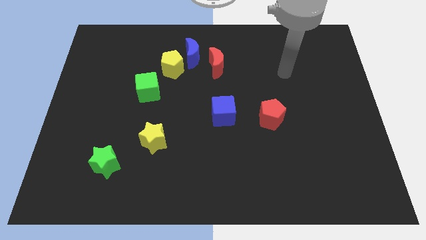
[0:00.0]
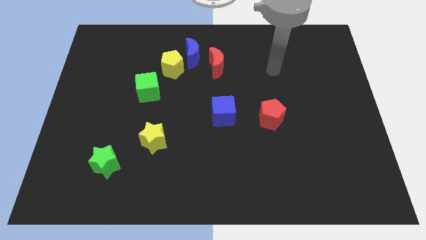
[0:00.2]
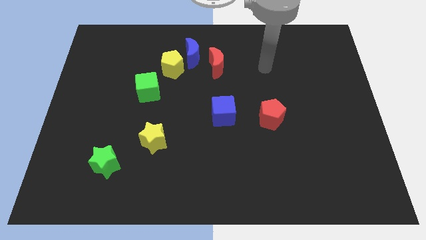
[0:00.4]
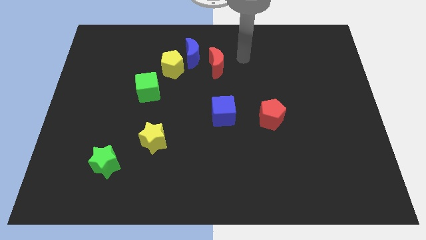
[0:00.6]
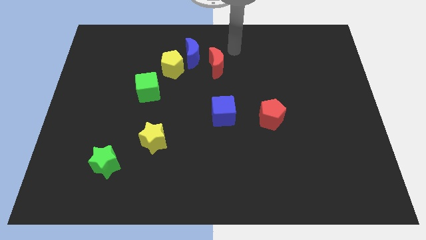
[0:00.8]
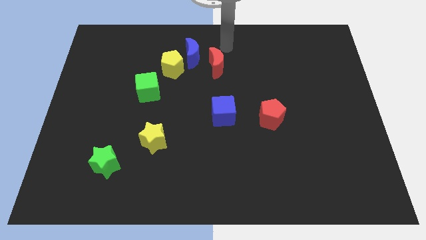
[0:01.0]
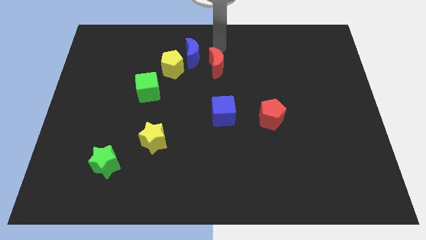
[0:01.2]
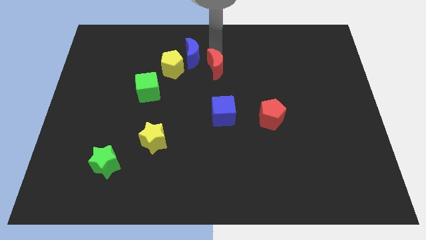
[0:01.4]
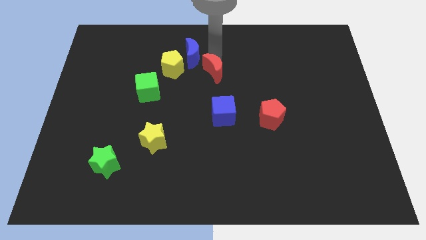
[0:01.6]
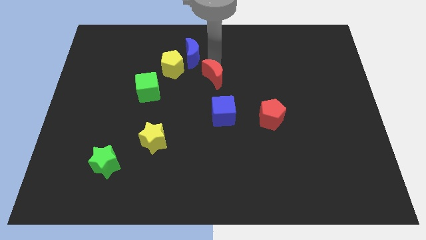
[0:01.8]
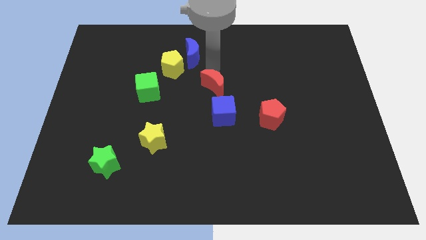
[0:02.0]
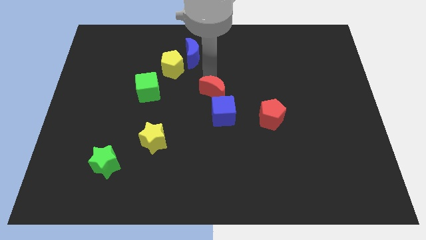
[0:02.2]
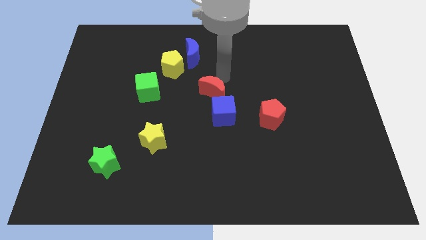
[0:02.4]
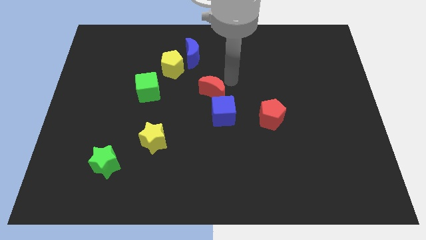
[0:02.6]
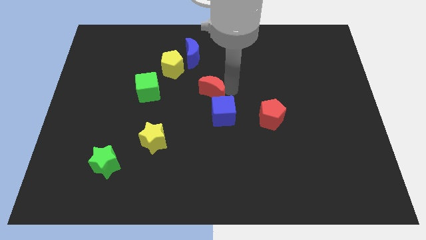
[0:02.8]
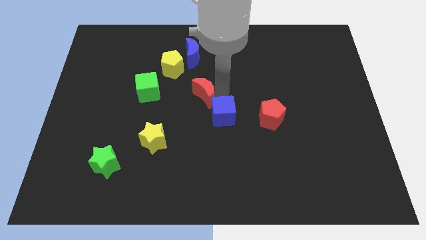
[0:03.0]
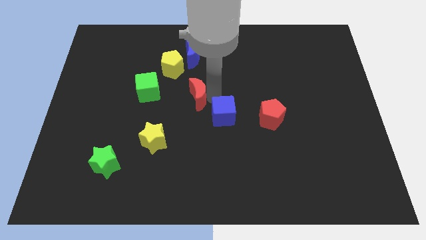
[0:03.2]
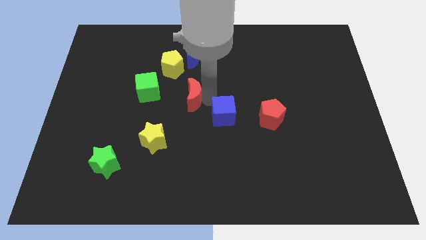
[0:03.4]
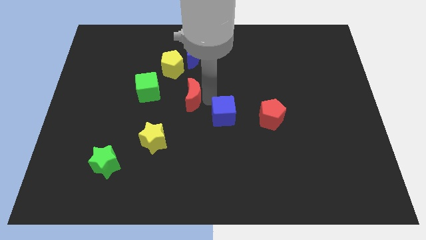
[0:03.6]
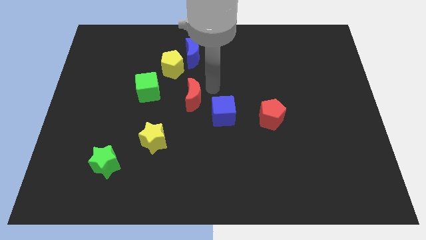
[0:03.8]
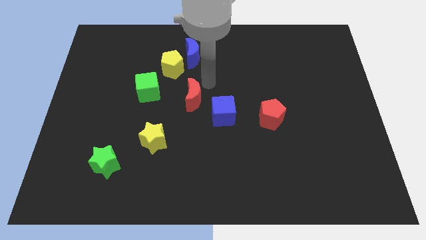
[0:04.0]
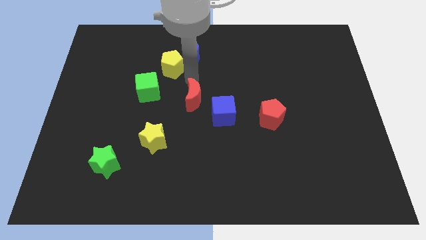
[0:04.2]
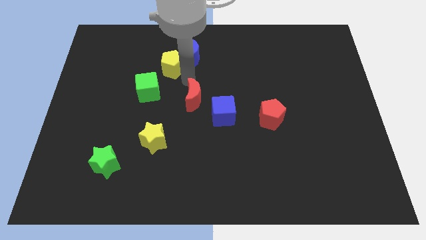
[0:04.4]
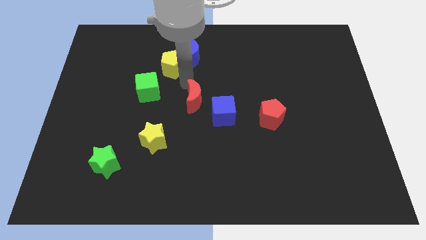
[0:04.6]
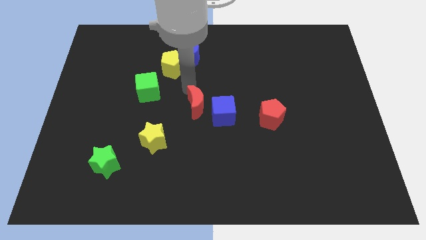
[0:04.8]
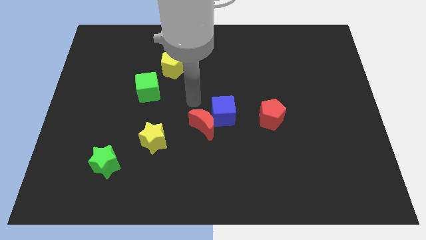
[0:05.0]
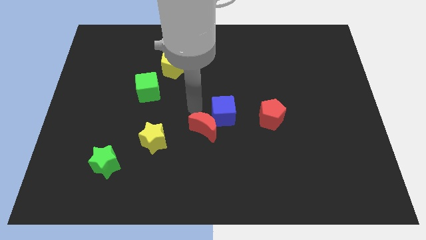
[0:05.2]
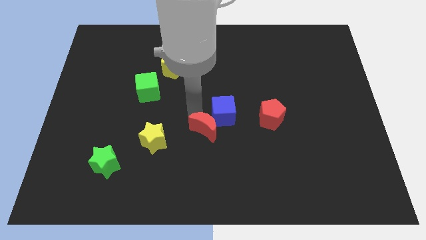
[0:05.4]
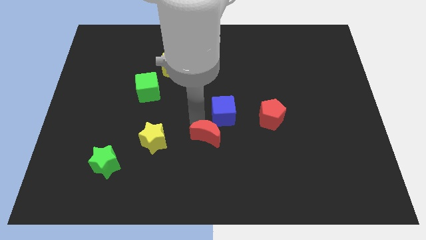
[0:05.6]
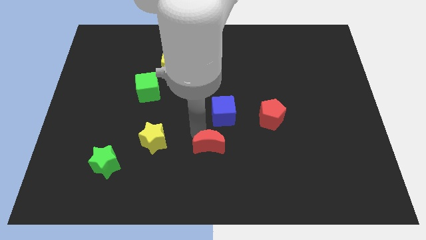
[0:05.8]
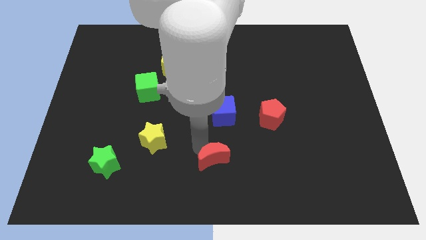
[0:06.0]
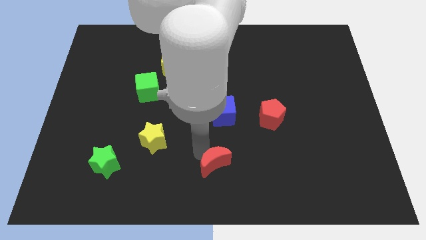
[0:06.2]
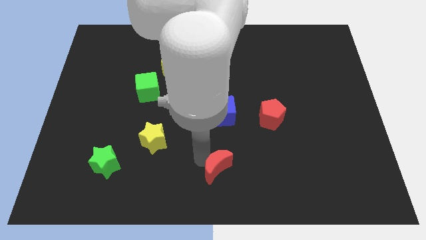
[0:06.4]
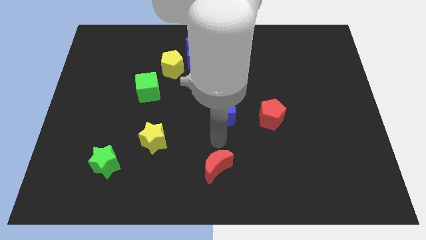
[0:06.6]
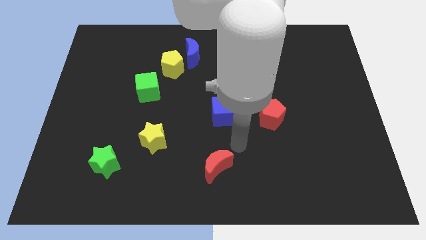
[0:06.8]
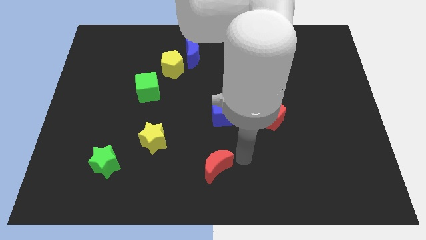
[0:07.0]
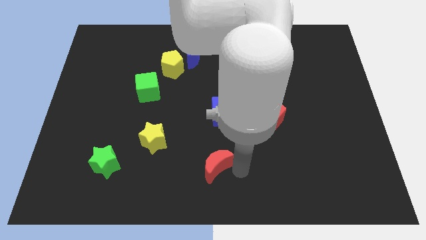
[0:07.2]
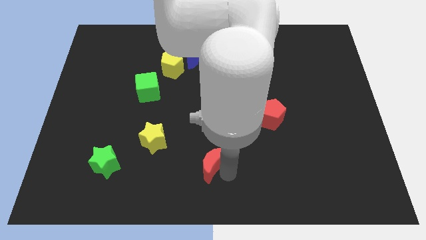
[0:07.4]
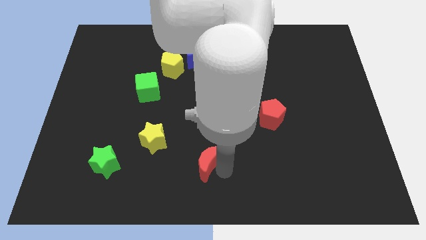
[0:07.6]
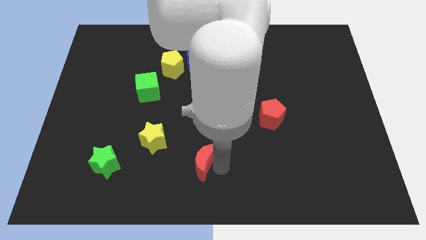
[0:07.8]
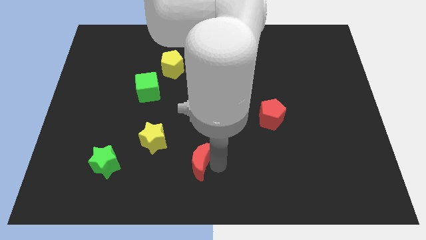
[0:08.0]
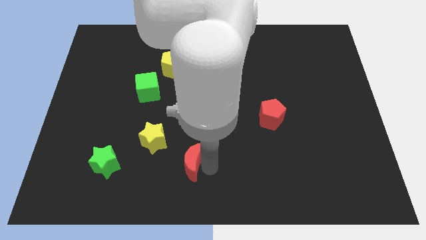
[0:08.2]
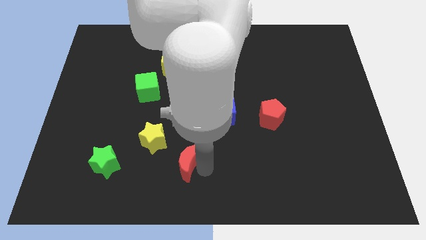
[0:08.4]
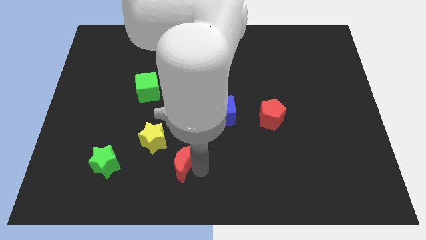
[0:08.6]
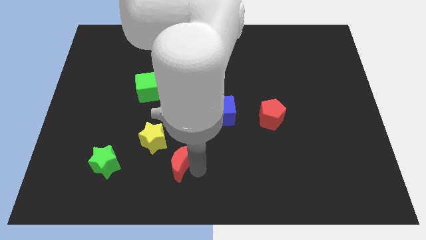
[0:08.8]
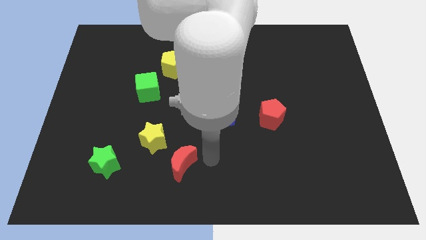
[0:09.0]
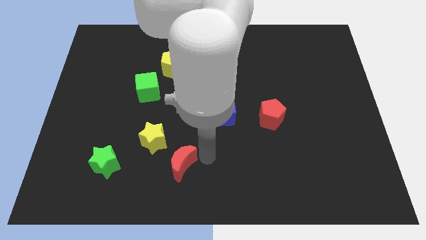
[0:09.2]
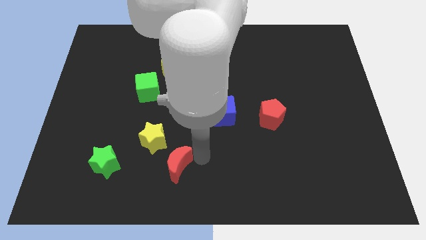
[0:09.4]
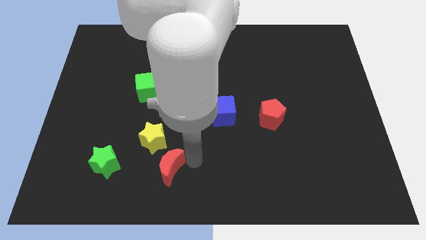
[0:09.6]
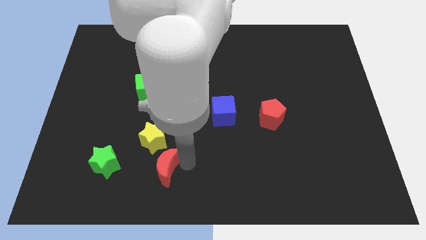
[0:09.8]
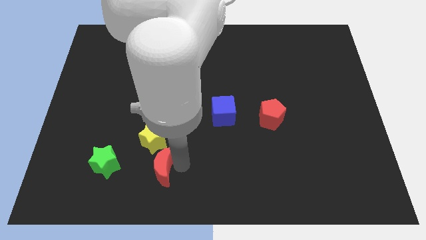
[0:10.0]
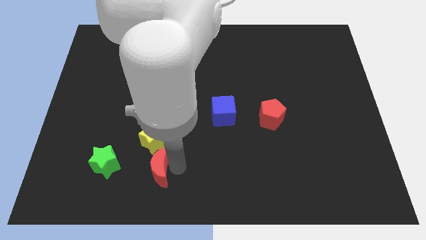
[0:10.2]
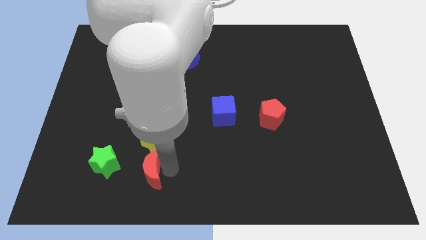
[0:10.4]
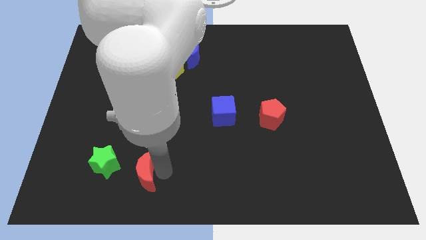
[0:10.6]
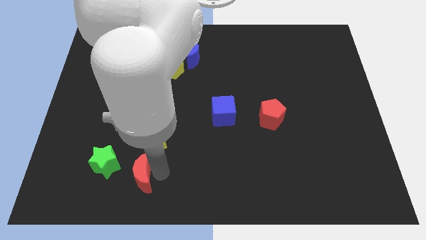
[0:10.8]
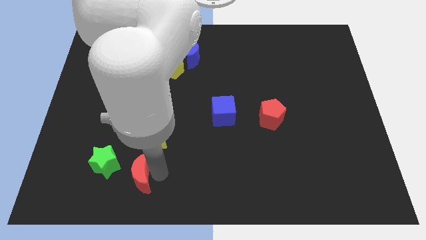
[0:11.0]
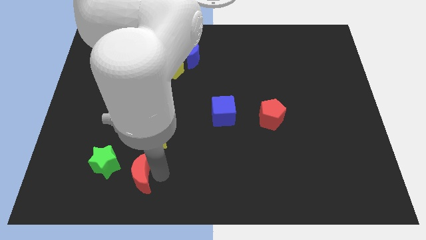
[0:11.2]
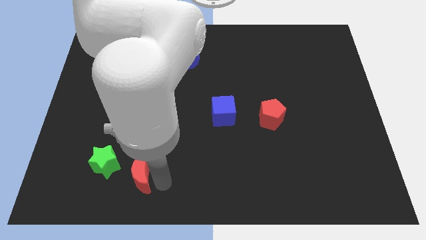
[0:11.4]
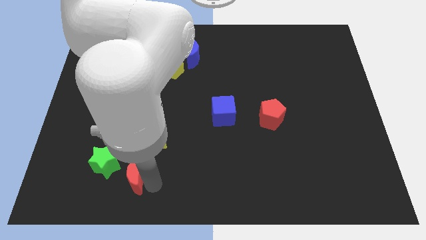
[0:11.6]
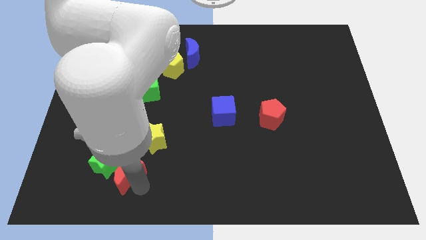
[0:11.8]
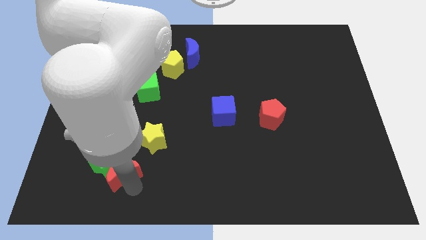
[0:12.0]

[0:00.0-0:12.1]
slide the red moon towards the green star

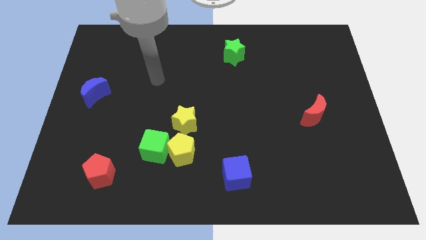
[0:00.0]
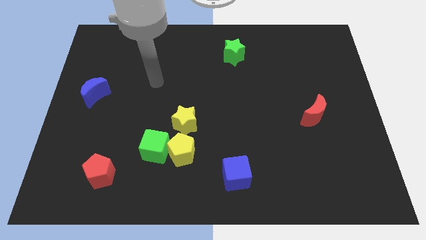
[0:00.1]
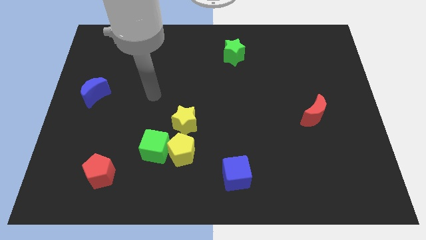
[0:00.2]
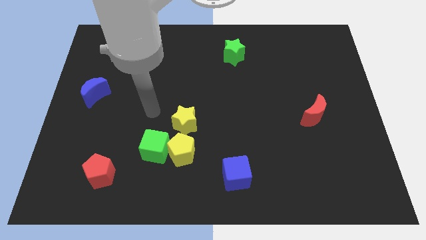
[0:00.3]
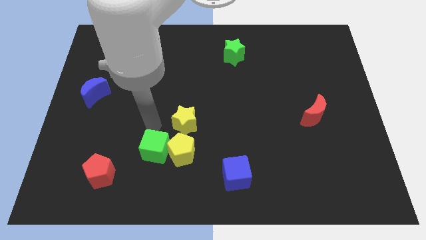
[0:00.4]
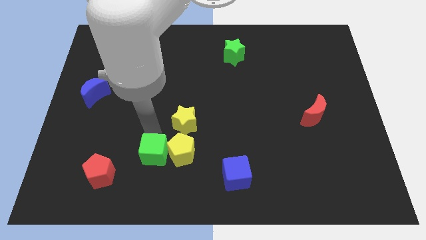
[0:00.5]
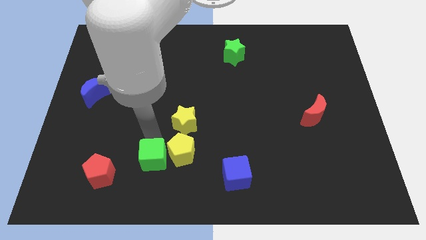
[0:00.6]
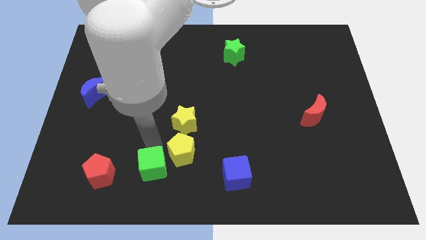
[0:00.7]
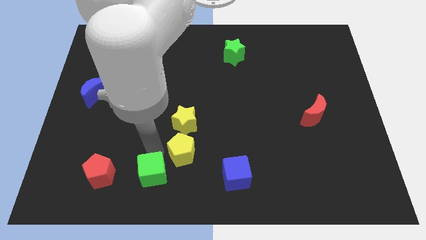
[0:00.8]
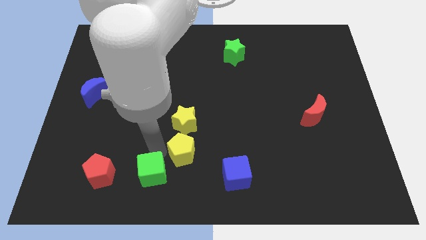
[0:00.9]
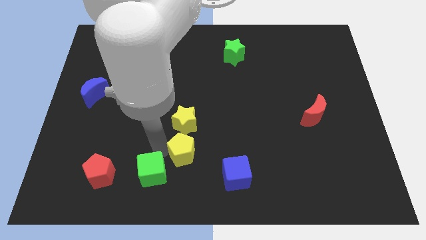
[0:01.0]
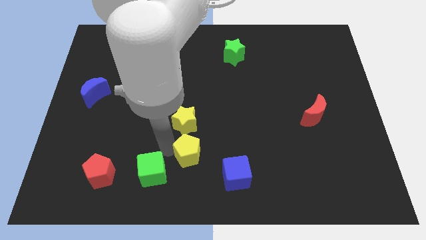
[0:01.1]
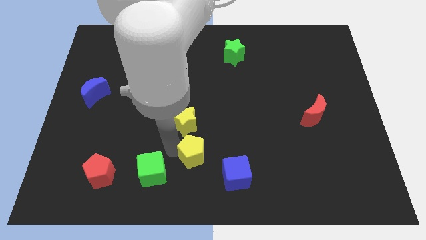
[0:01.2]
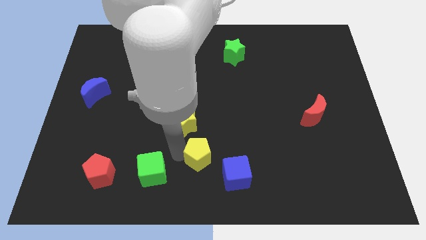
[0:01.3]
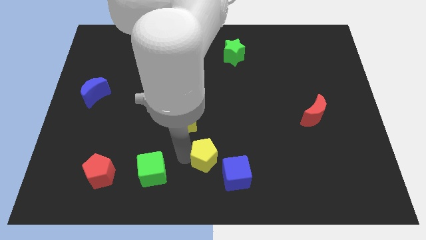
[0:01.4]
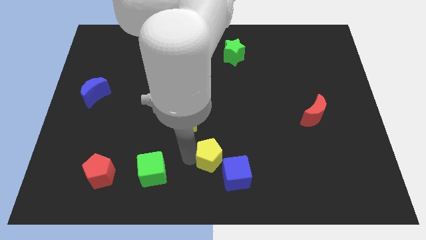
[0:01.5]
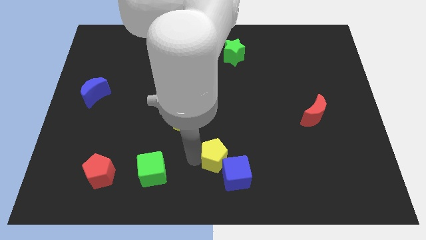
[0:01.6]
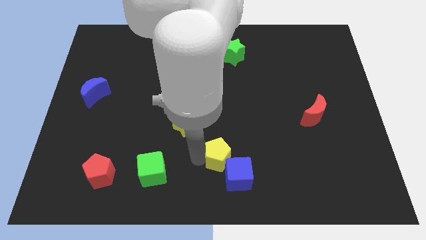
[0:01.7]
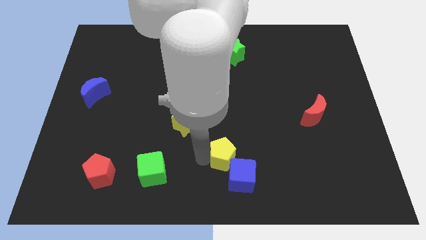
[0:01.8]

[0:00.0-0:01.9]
push the yellow pentagon next to the blue cube

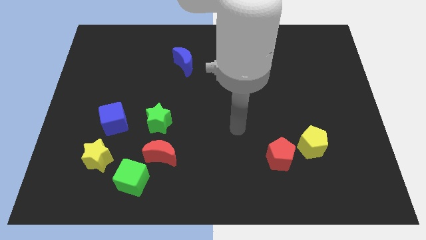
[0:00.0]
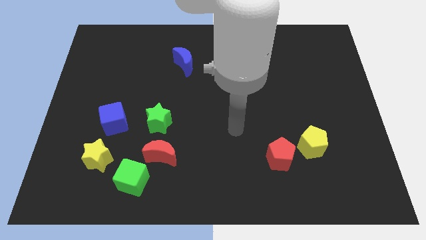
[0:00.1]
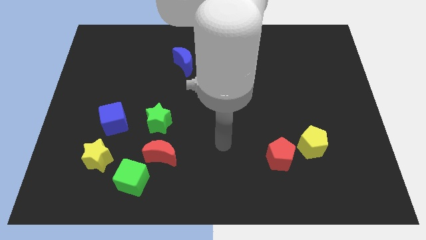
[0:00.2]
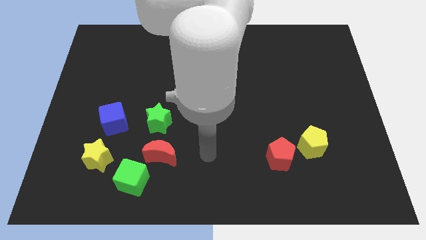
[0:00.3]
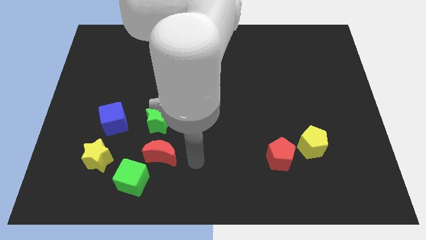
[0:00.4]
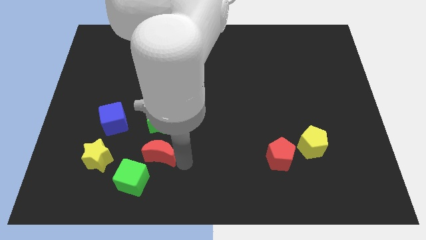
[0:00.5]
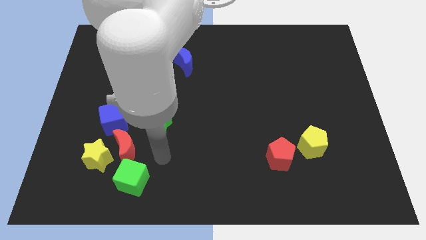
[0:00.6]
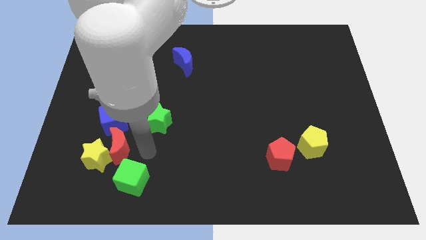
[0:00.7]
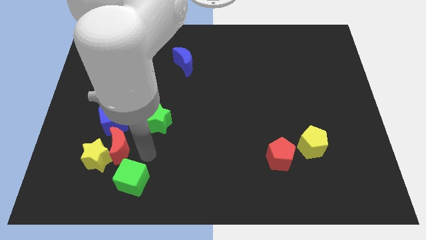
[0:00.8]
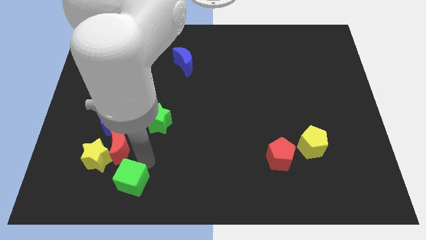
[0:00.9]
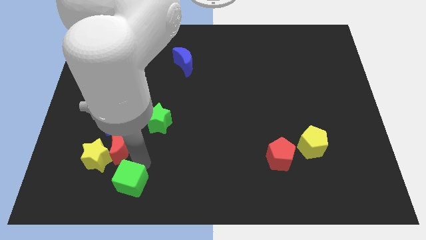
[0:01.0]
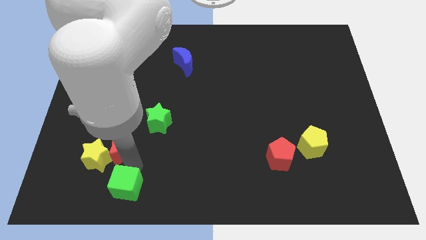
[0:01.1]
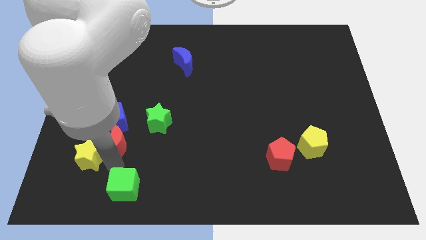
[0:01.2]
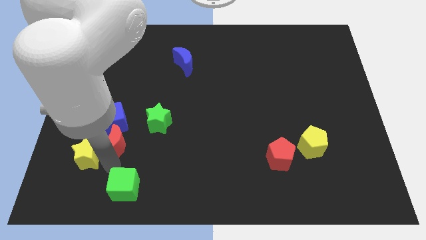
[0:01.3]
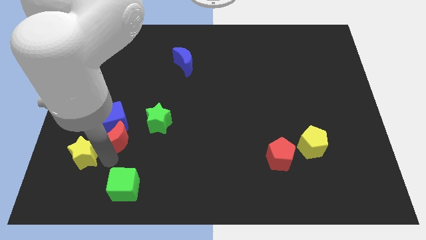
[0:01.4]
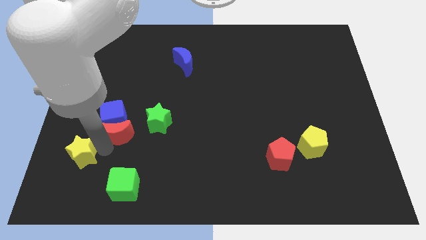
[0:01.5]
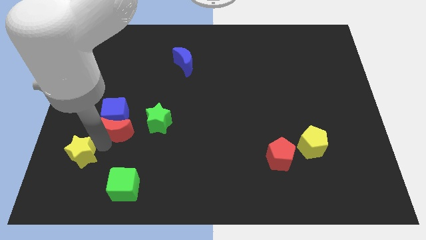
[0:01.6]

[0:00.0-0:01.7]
push the red moon close to the blue cube
